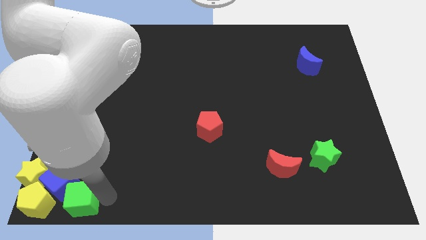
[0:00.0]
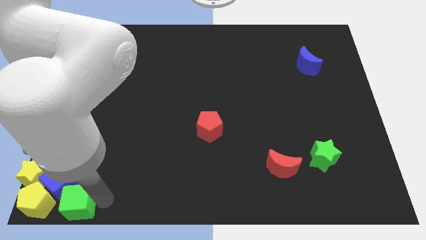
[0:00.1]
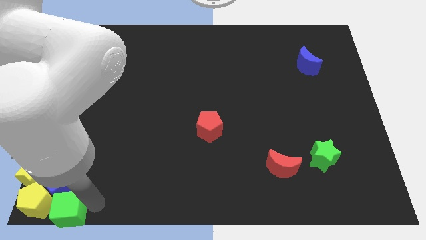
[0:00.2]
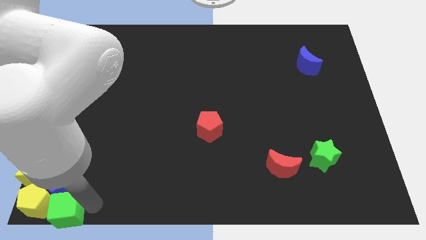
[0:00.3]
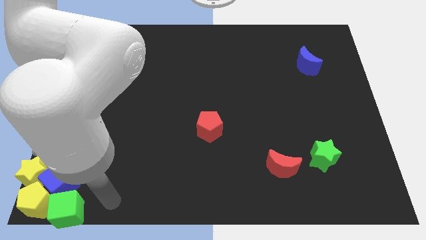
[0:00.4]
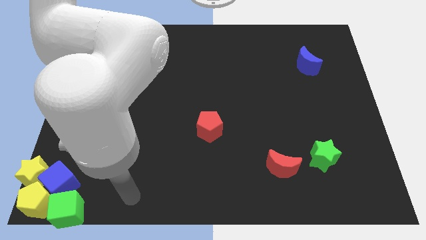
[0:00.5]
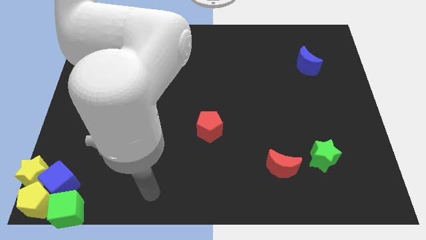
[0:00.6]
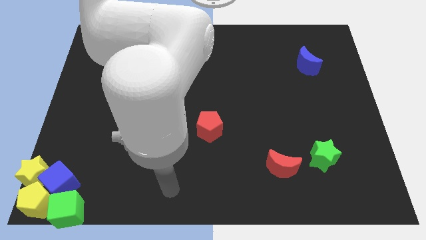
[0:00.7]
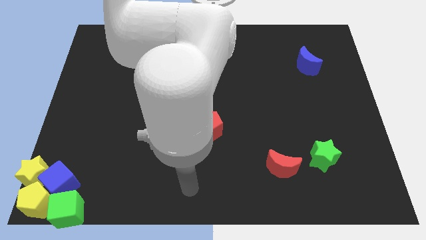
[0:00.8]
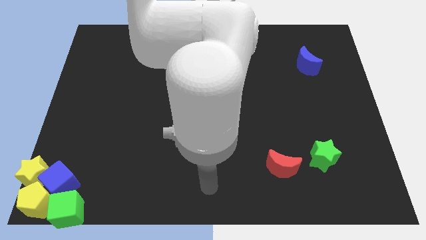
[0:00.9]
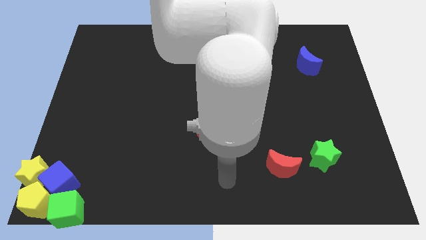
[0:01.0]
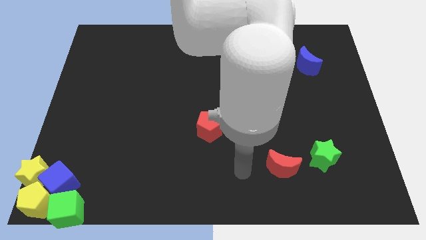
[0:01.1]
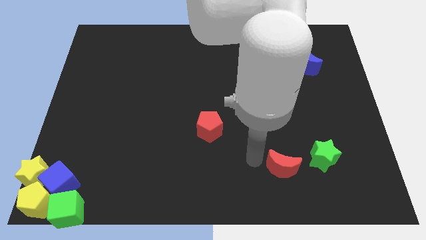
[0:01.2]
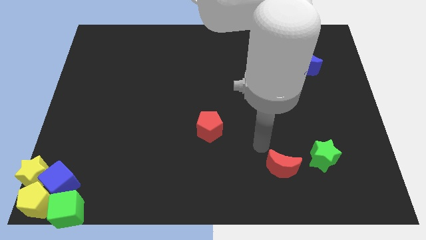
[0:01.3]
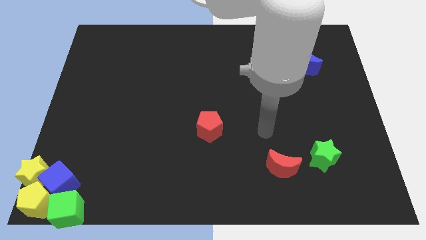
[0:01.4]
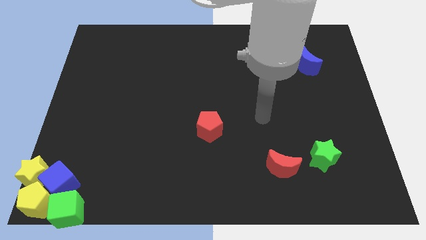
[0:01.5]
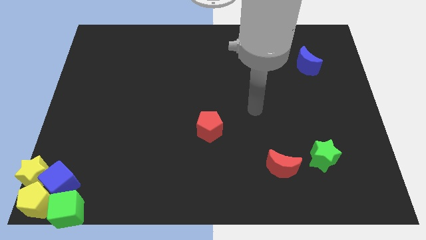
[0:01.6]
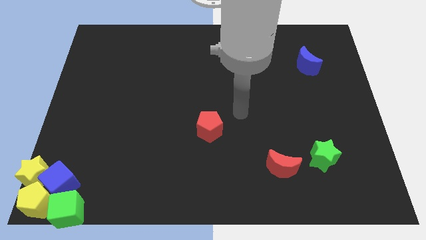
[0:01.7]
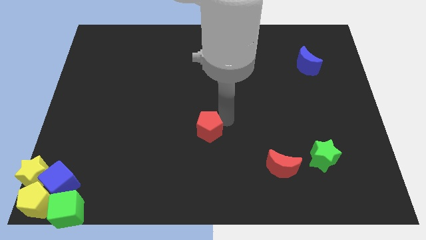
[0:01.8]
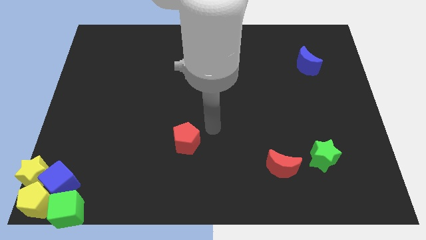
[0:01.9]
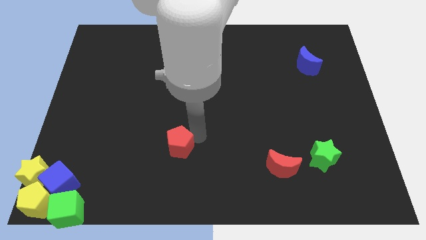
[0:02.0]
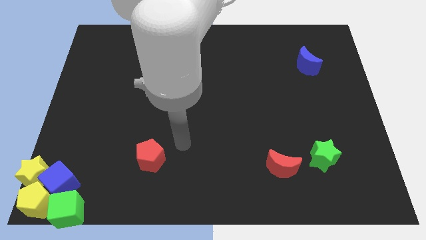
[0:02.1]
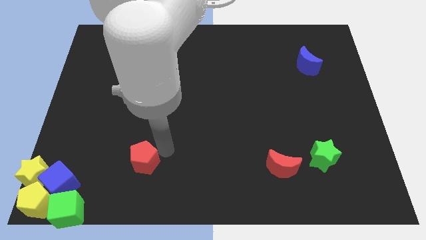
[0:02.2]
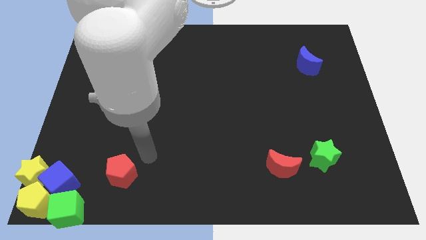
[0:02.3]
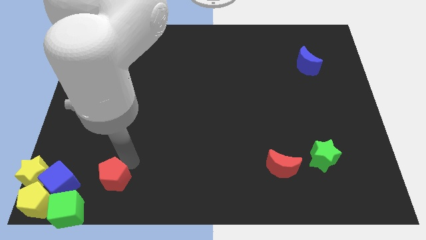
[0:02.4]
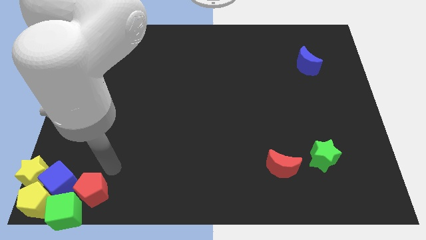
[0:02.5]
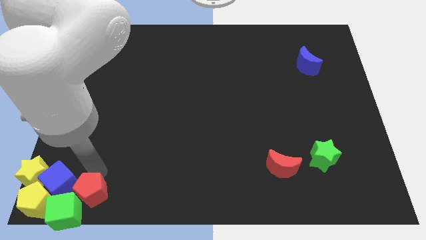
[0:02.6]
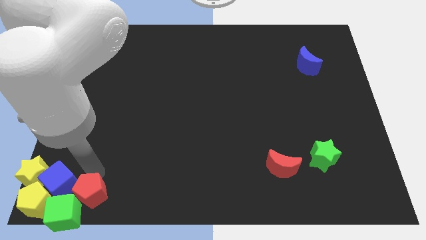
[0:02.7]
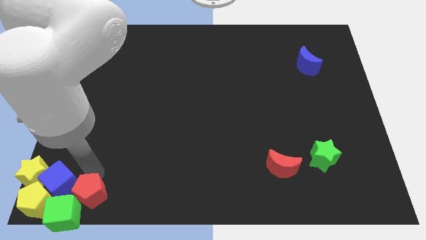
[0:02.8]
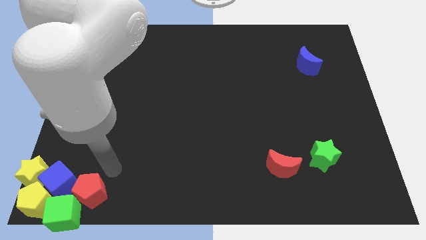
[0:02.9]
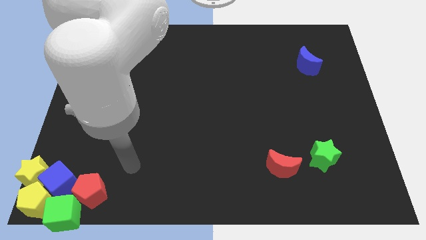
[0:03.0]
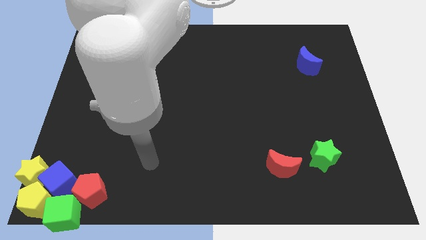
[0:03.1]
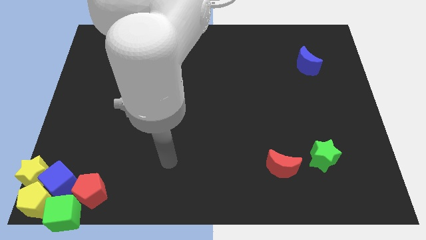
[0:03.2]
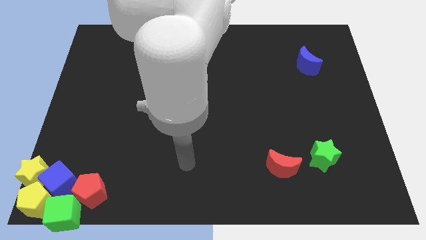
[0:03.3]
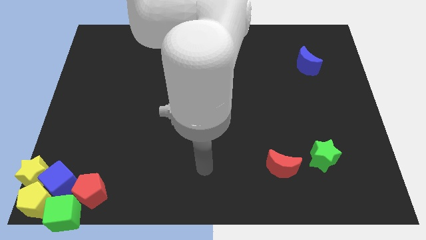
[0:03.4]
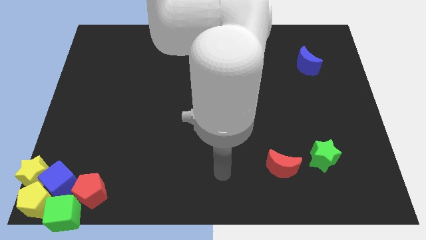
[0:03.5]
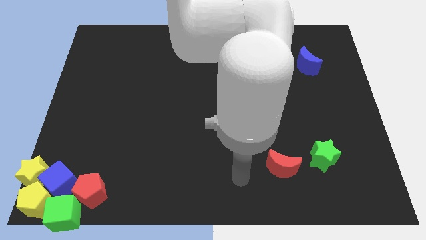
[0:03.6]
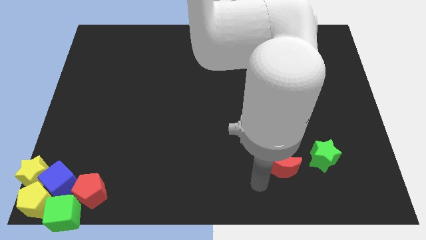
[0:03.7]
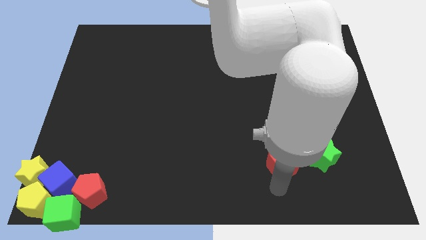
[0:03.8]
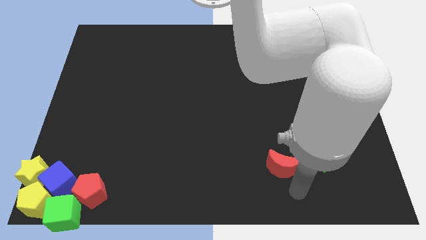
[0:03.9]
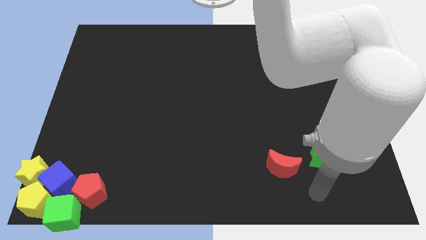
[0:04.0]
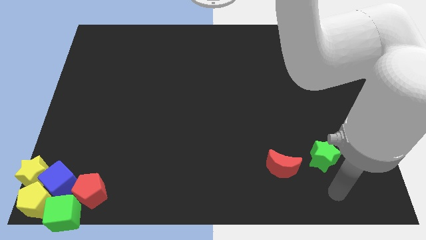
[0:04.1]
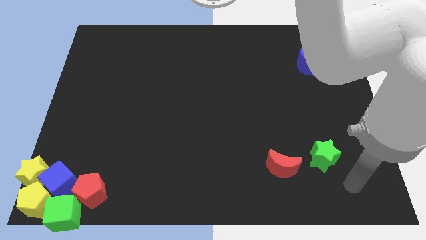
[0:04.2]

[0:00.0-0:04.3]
place the red pentagon into the group of blocks

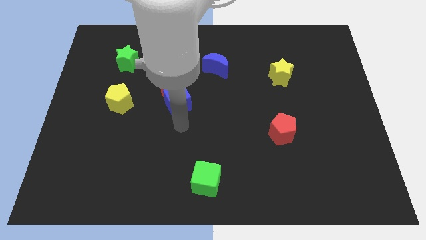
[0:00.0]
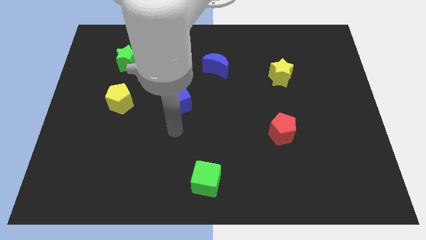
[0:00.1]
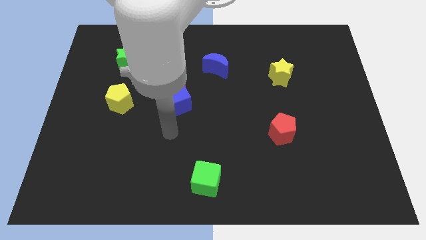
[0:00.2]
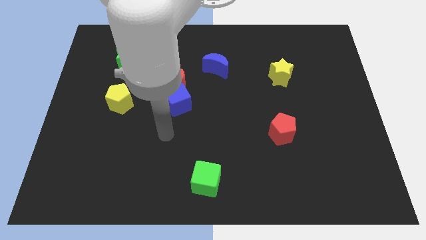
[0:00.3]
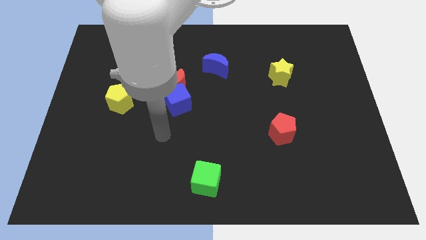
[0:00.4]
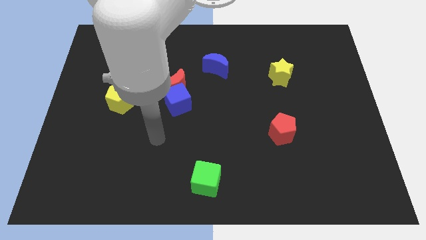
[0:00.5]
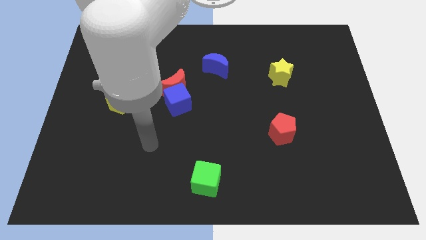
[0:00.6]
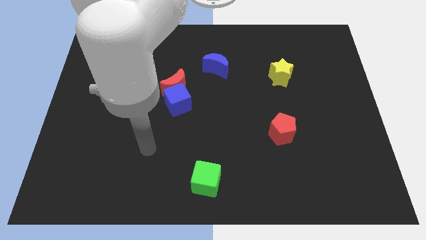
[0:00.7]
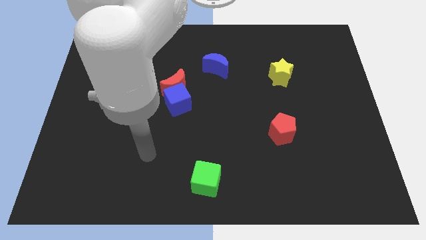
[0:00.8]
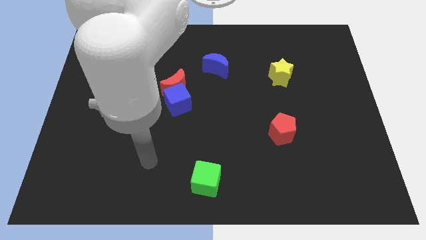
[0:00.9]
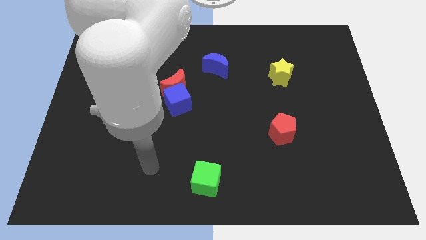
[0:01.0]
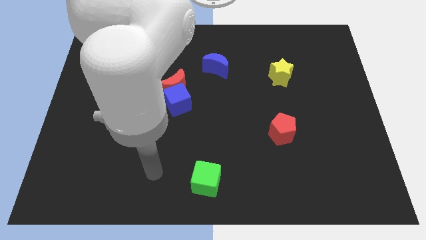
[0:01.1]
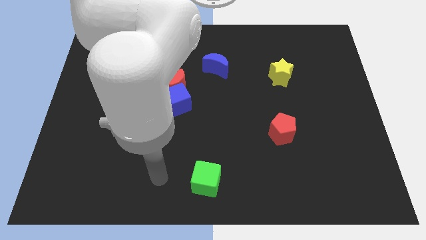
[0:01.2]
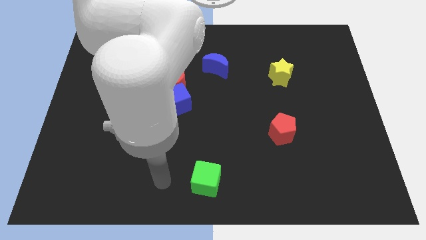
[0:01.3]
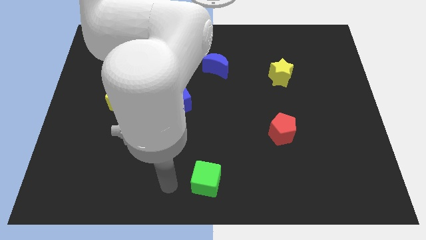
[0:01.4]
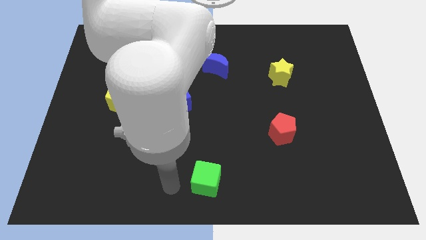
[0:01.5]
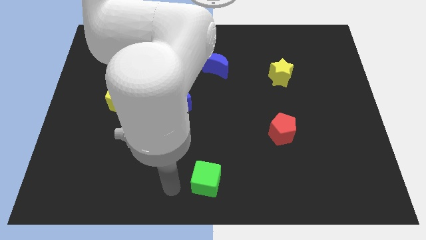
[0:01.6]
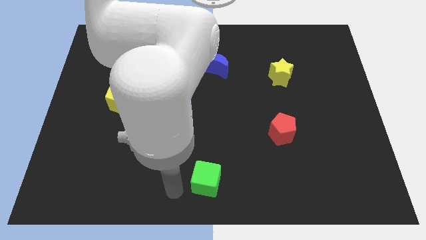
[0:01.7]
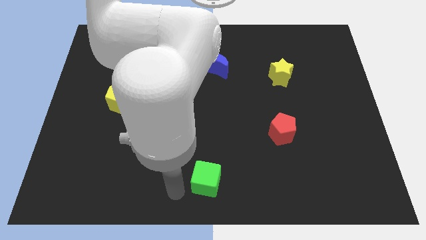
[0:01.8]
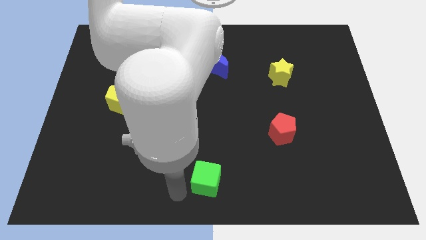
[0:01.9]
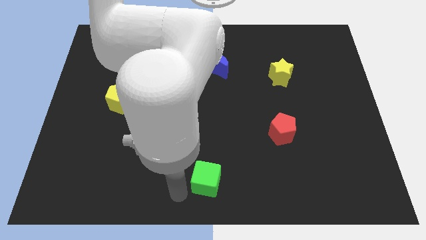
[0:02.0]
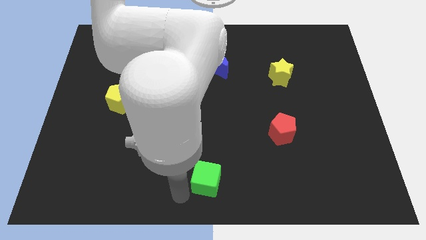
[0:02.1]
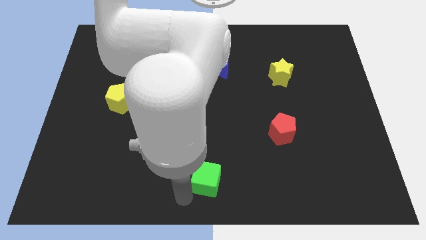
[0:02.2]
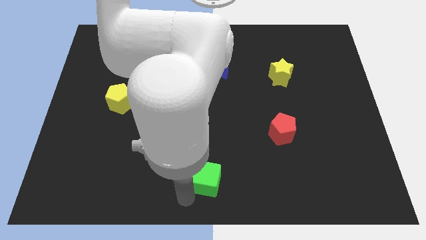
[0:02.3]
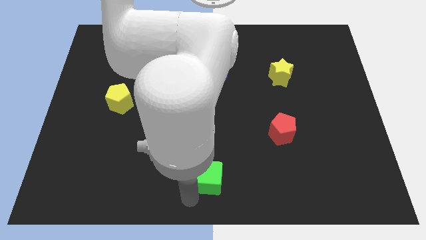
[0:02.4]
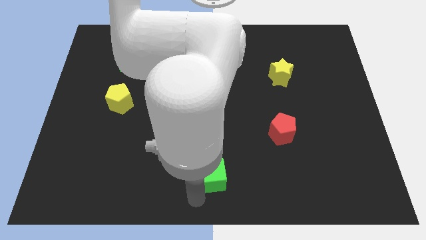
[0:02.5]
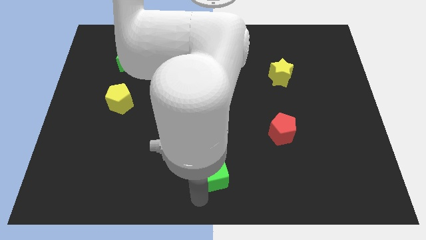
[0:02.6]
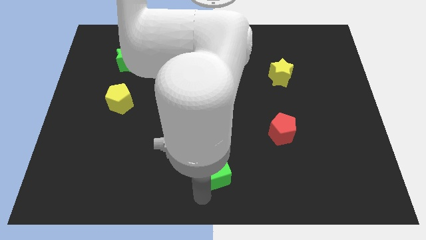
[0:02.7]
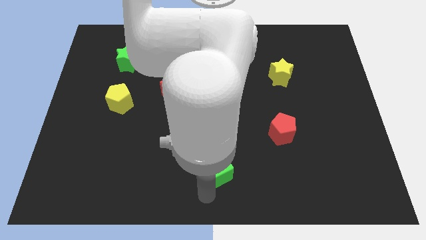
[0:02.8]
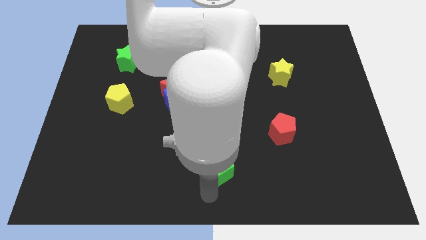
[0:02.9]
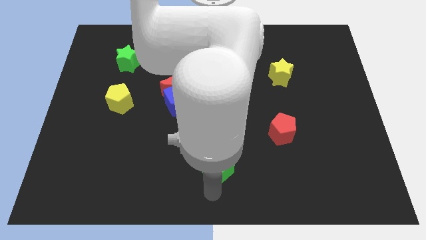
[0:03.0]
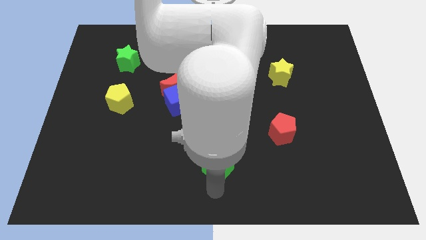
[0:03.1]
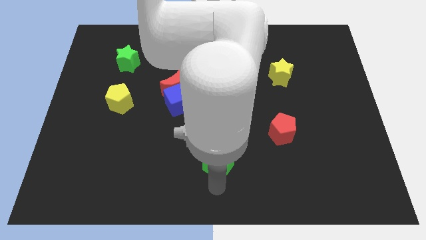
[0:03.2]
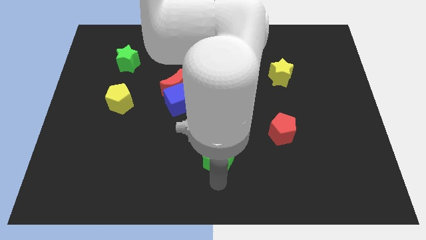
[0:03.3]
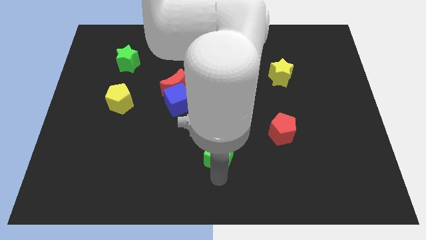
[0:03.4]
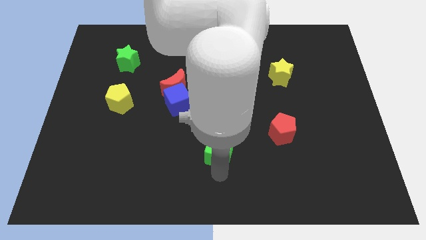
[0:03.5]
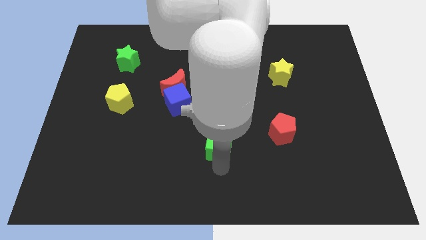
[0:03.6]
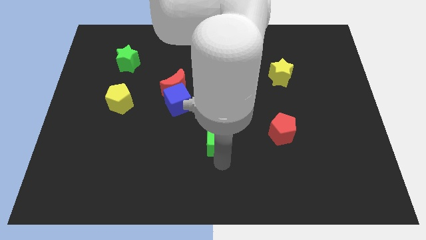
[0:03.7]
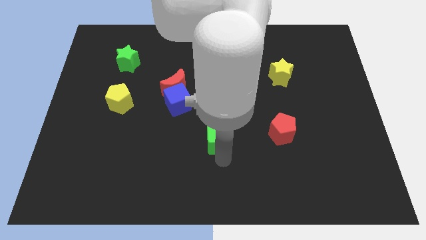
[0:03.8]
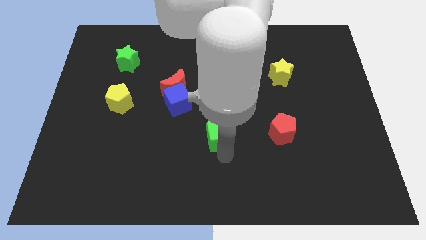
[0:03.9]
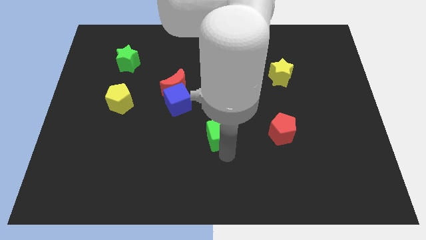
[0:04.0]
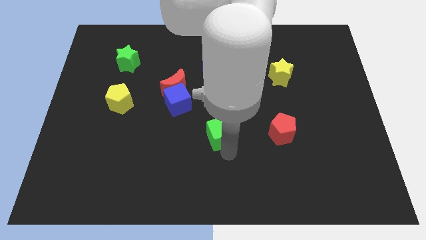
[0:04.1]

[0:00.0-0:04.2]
move the green cube to the left of the red pentagon

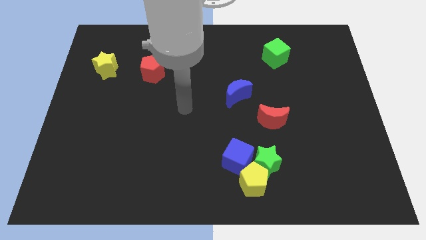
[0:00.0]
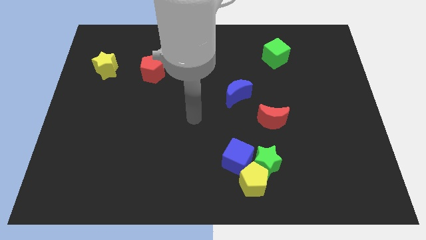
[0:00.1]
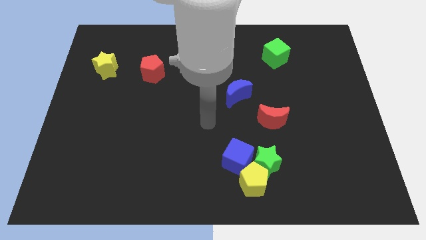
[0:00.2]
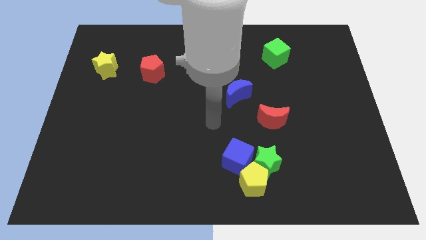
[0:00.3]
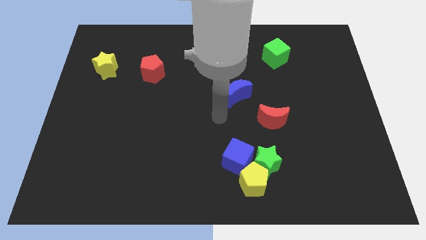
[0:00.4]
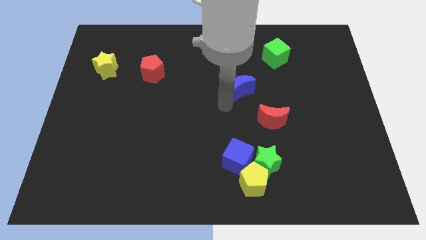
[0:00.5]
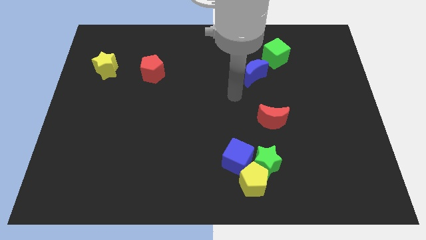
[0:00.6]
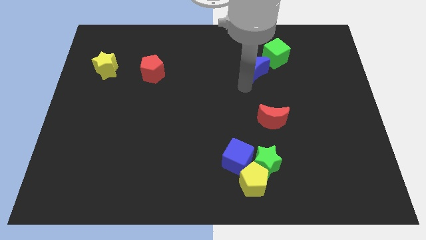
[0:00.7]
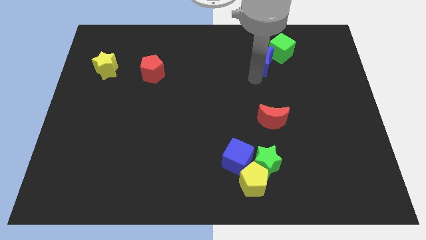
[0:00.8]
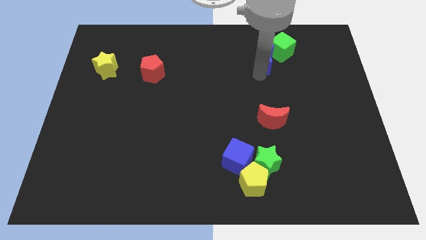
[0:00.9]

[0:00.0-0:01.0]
move the blue crescent below the green cube
